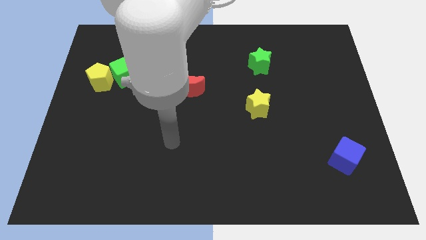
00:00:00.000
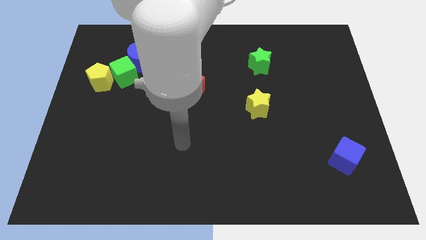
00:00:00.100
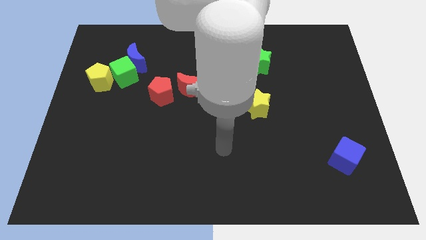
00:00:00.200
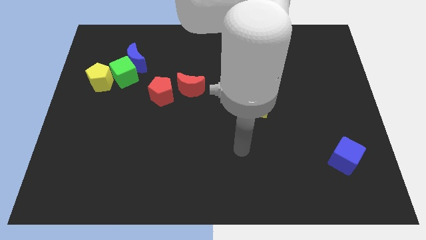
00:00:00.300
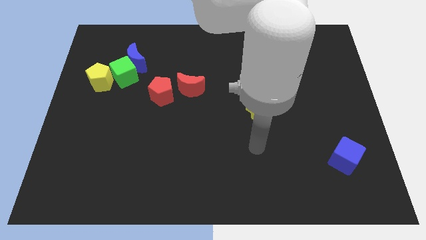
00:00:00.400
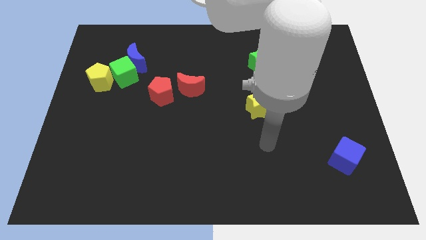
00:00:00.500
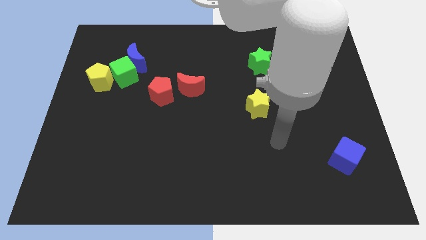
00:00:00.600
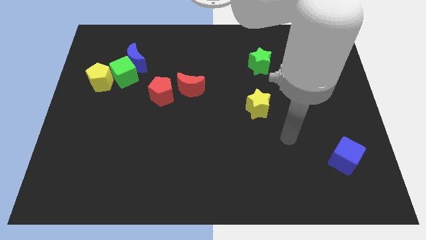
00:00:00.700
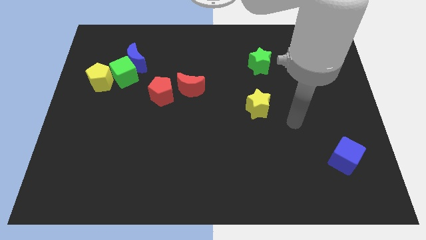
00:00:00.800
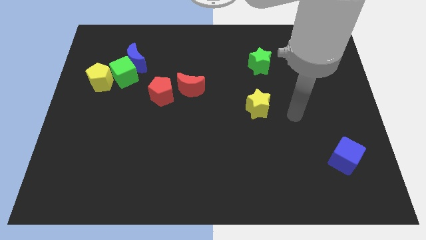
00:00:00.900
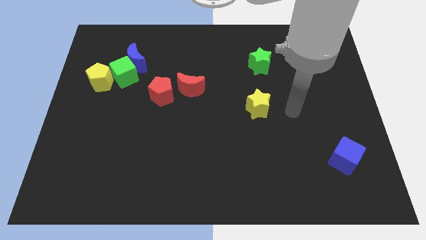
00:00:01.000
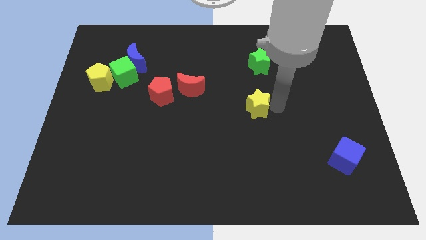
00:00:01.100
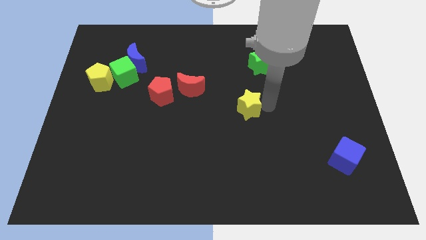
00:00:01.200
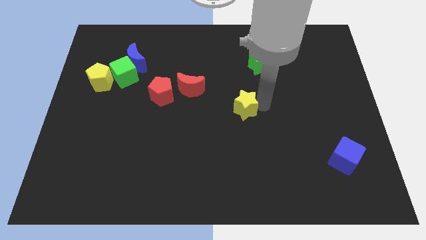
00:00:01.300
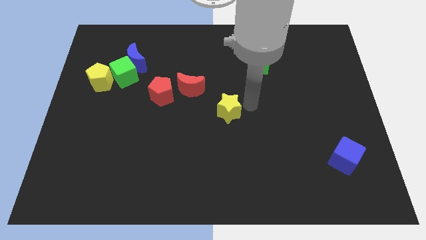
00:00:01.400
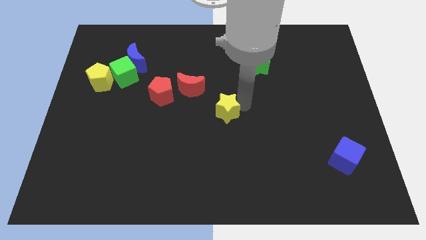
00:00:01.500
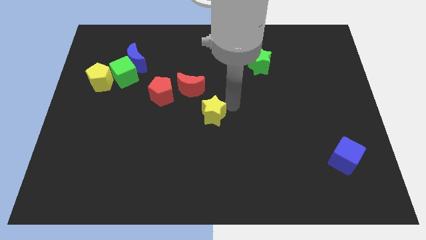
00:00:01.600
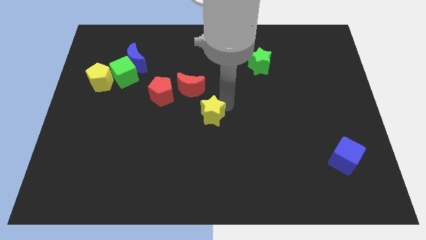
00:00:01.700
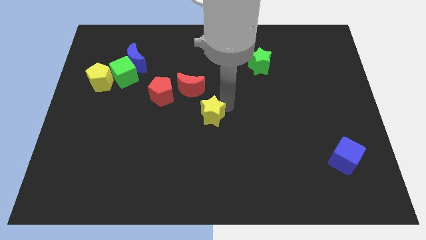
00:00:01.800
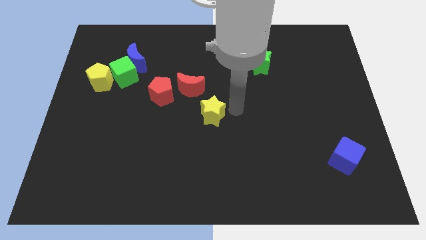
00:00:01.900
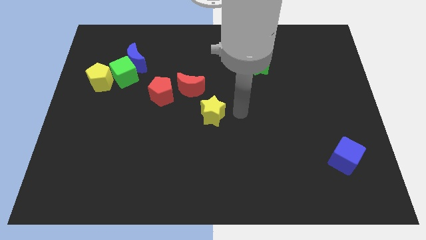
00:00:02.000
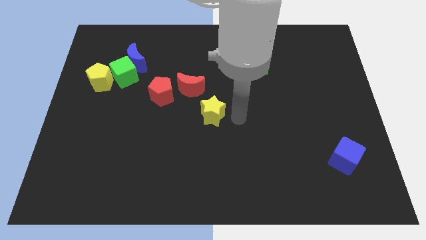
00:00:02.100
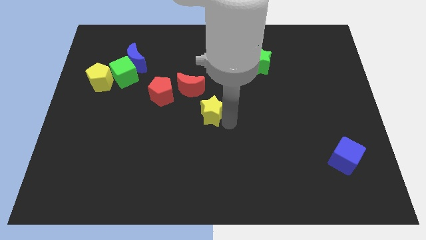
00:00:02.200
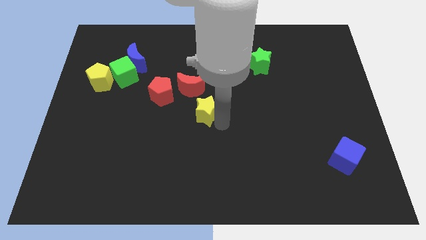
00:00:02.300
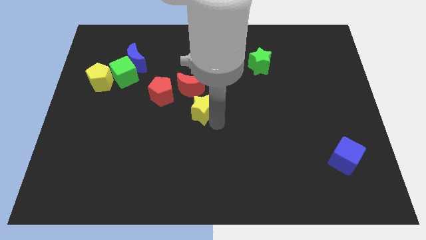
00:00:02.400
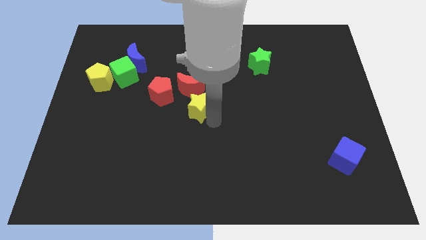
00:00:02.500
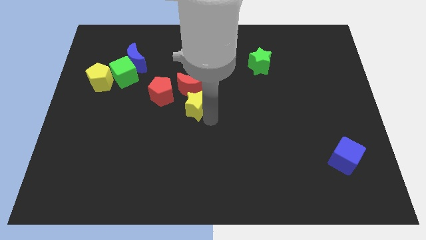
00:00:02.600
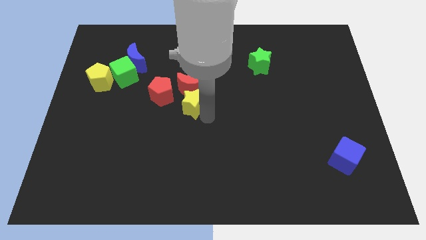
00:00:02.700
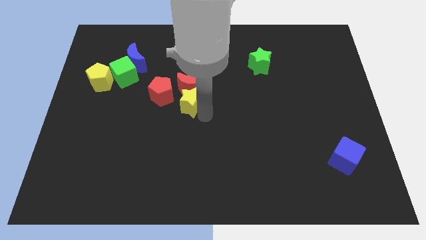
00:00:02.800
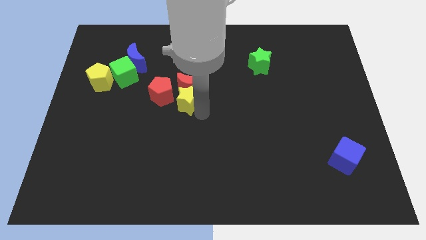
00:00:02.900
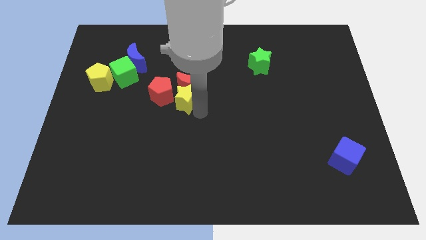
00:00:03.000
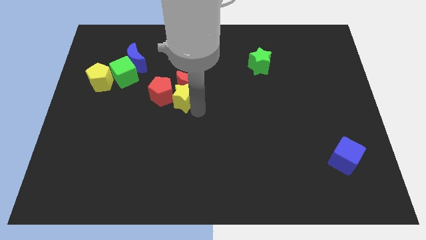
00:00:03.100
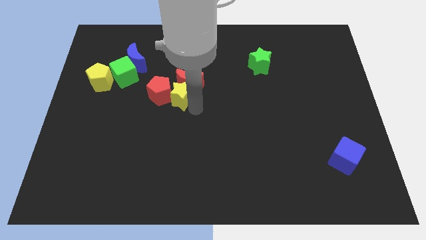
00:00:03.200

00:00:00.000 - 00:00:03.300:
put the yellow star to the red pentagon

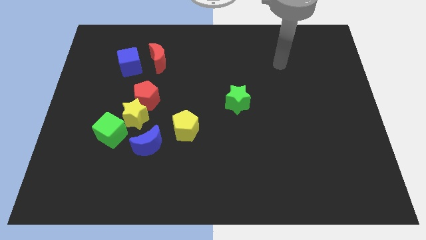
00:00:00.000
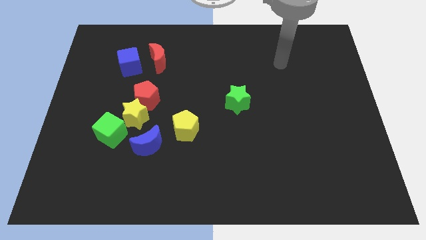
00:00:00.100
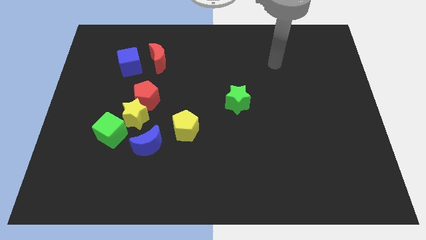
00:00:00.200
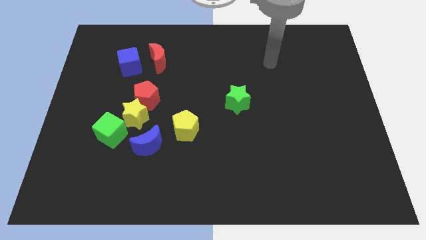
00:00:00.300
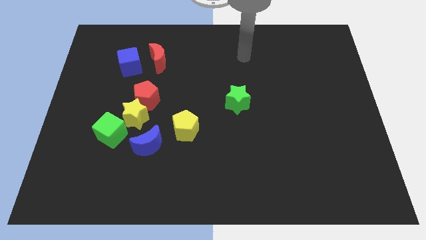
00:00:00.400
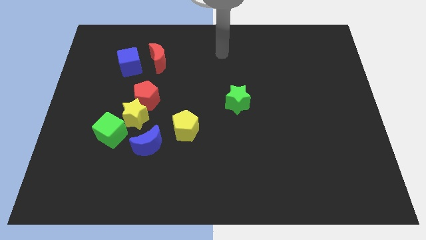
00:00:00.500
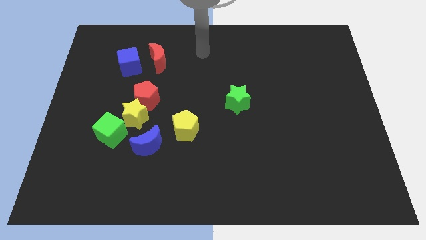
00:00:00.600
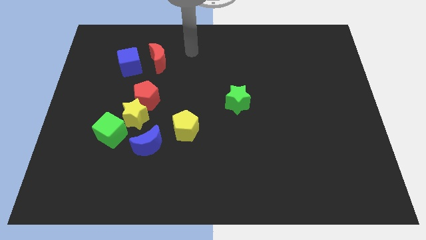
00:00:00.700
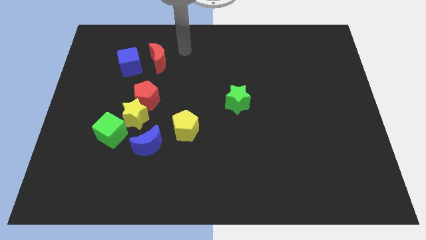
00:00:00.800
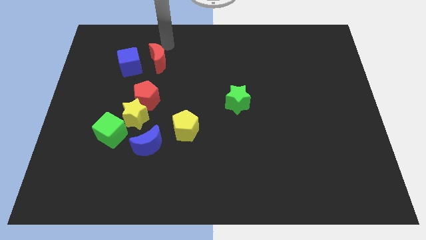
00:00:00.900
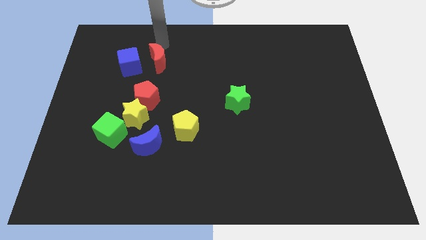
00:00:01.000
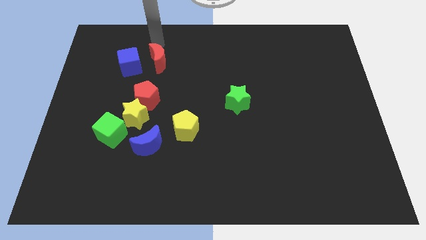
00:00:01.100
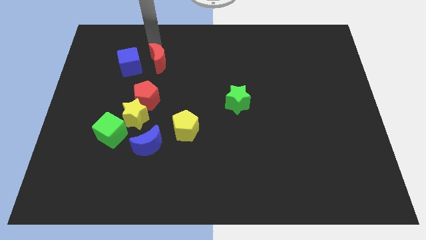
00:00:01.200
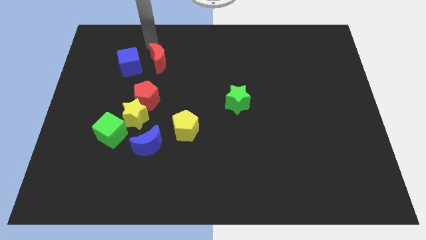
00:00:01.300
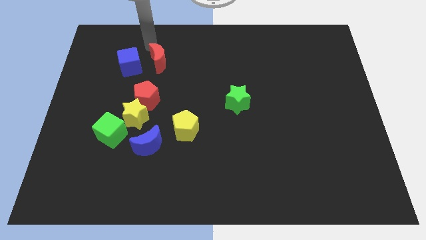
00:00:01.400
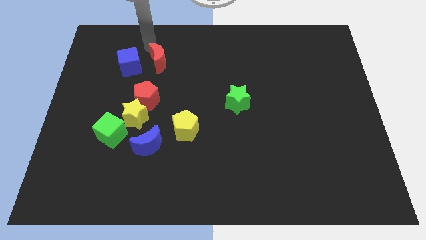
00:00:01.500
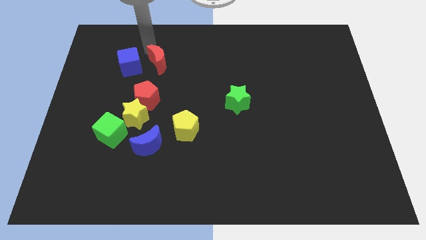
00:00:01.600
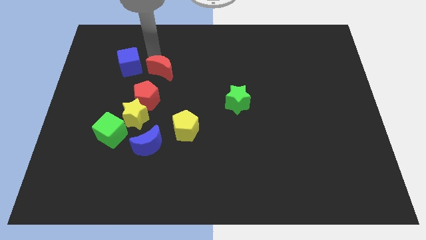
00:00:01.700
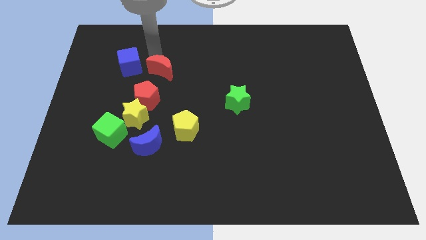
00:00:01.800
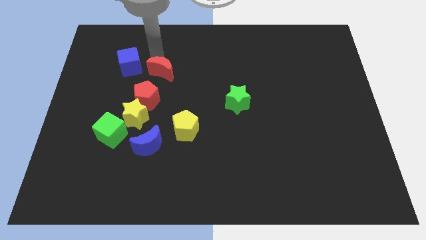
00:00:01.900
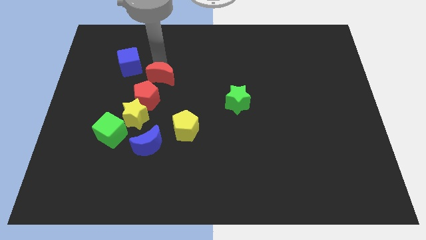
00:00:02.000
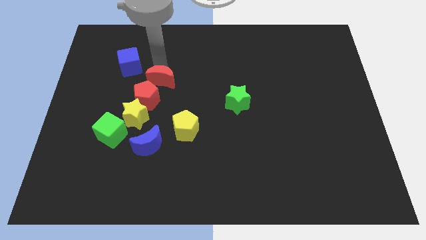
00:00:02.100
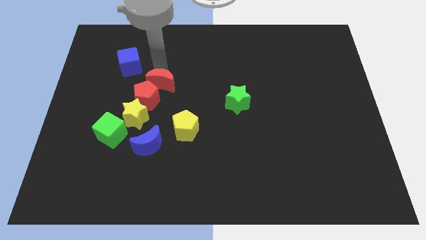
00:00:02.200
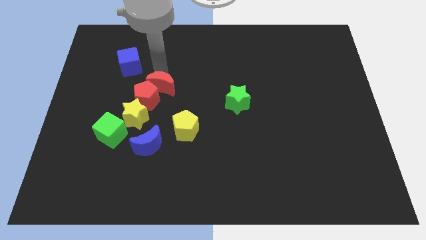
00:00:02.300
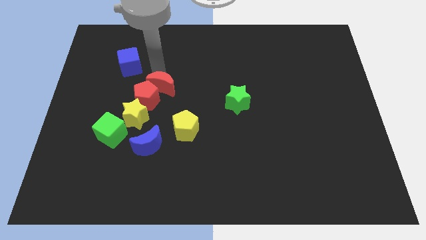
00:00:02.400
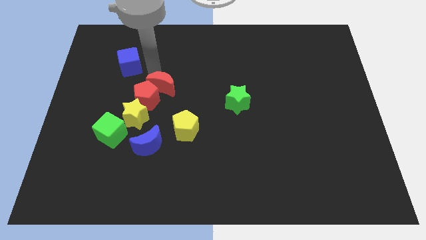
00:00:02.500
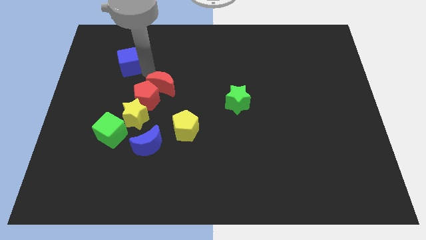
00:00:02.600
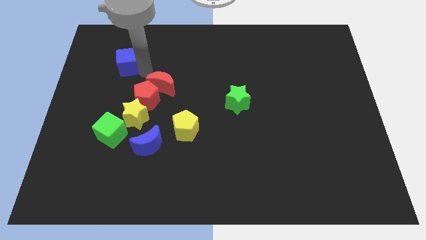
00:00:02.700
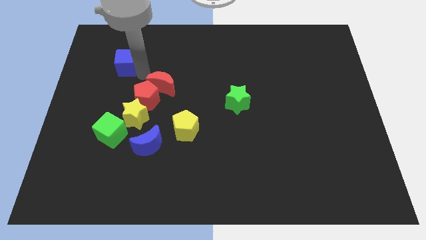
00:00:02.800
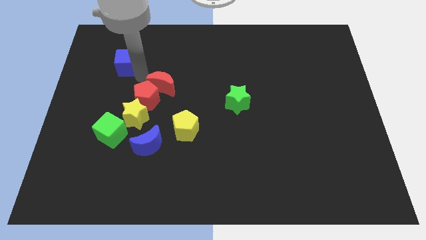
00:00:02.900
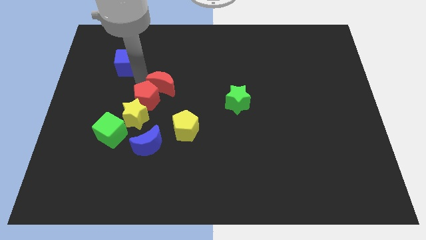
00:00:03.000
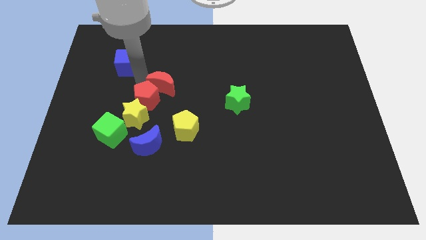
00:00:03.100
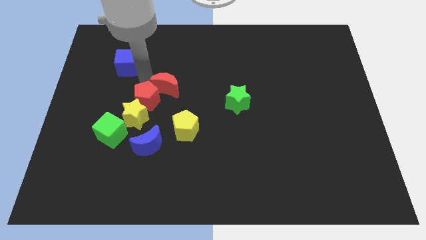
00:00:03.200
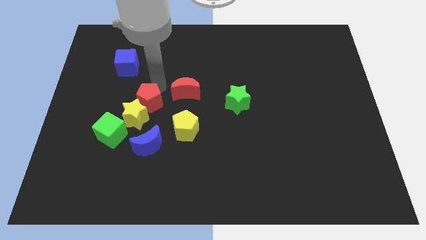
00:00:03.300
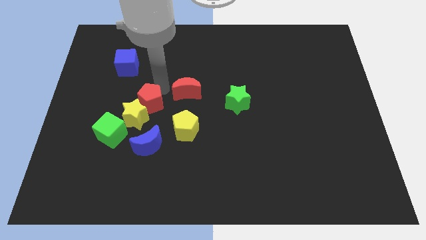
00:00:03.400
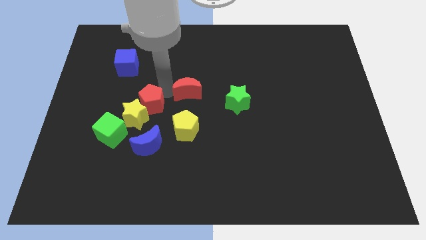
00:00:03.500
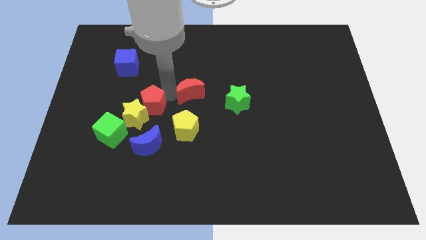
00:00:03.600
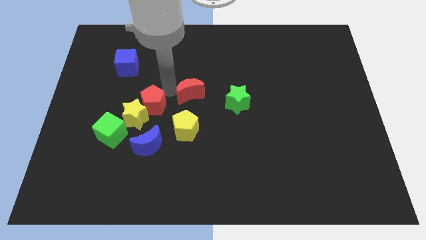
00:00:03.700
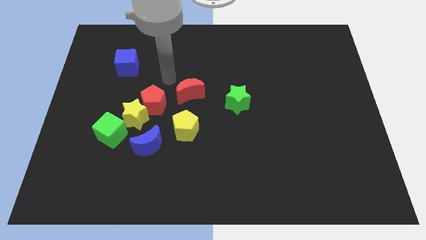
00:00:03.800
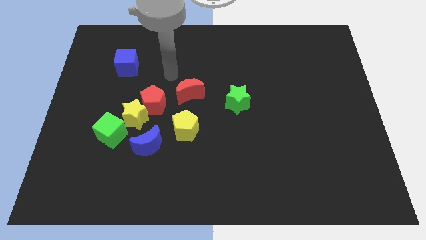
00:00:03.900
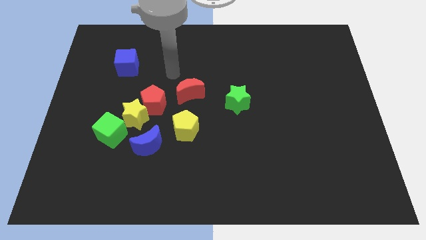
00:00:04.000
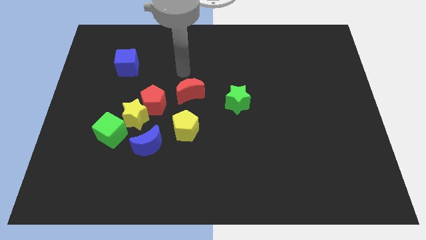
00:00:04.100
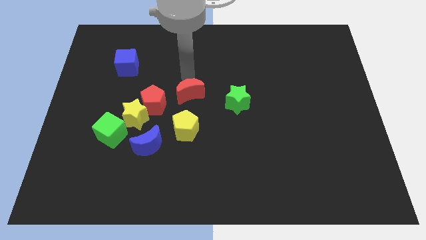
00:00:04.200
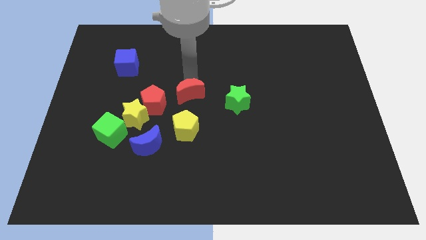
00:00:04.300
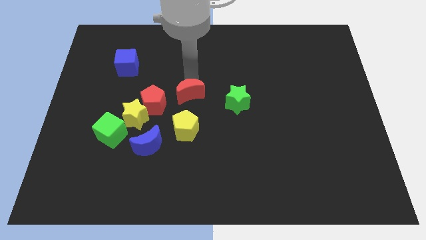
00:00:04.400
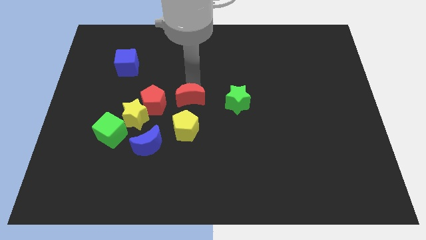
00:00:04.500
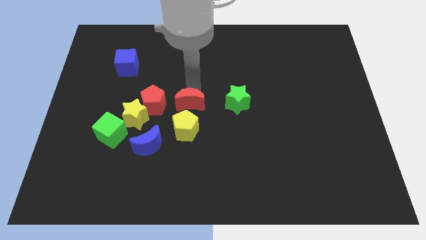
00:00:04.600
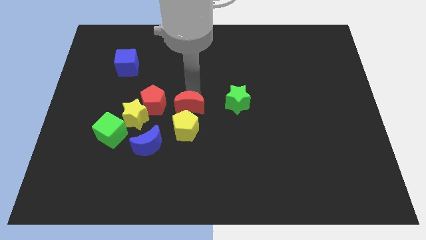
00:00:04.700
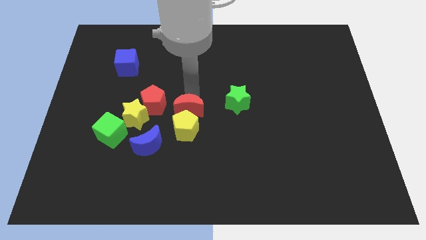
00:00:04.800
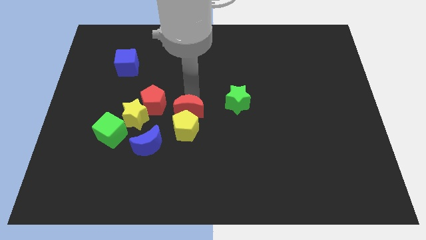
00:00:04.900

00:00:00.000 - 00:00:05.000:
slide the red moon next to the yellow pentagon

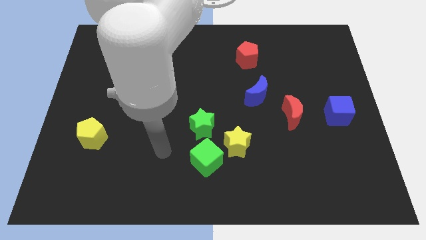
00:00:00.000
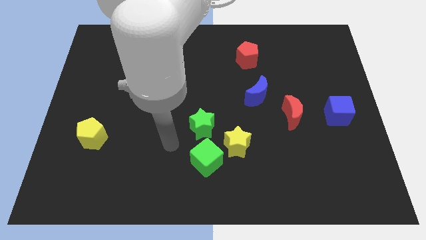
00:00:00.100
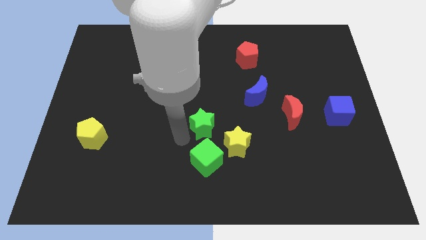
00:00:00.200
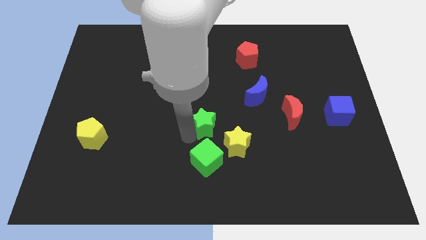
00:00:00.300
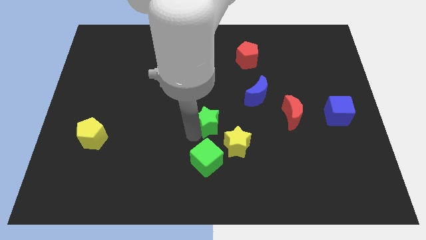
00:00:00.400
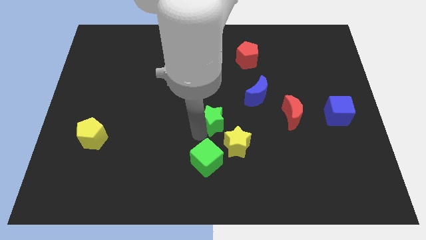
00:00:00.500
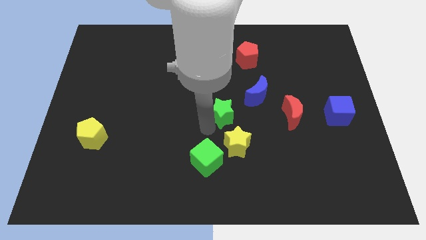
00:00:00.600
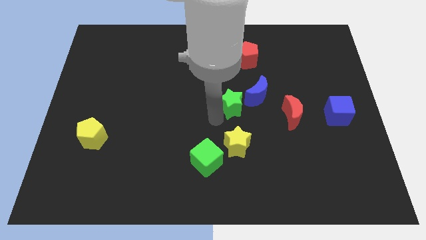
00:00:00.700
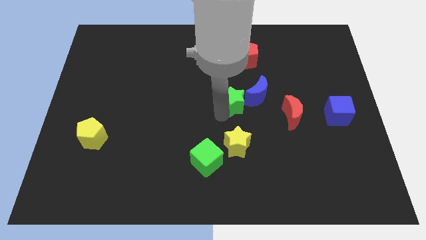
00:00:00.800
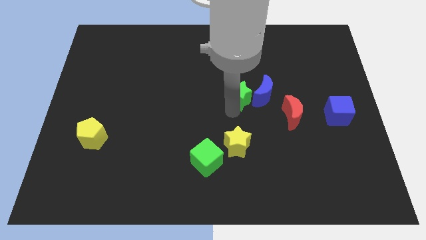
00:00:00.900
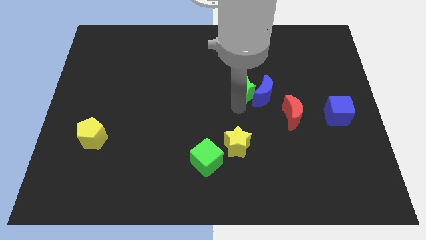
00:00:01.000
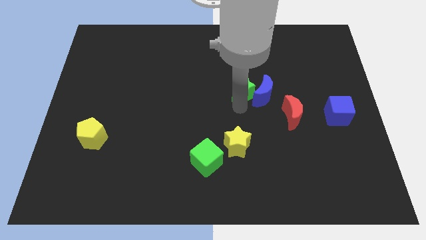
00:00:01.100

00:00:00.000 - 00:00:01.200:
put the green star to the blue moon
